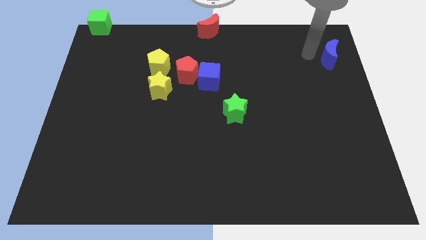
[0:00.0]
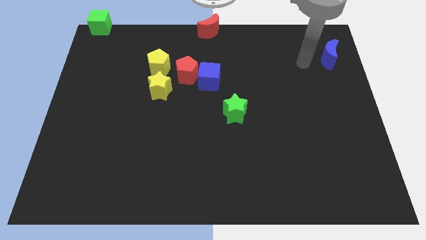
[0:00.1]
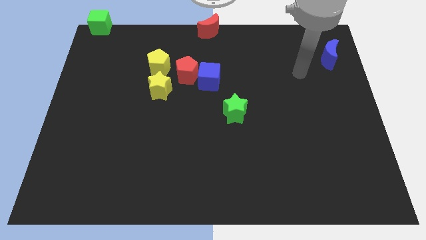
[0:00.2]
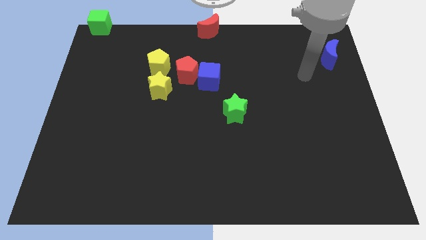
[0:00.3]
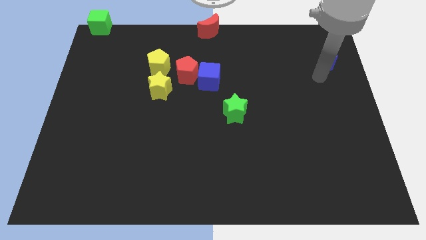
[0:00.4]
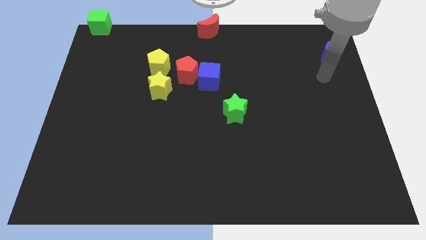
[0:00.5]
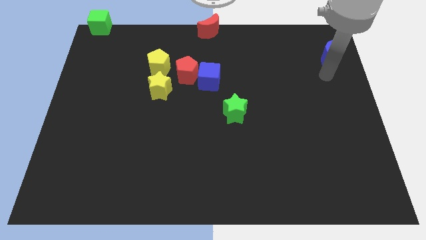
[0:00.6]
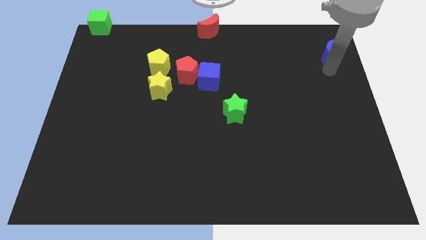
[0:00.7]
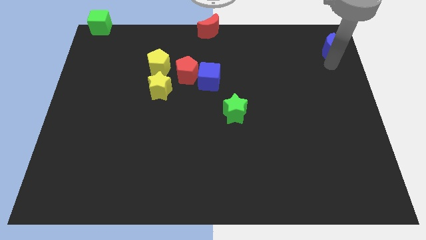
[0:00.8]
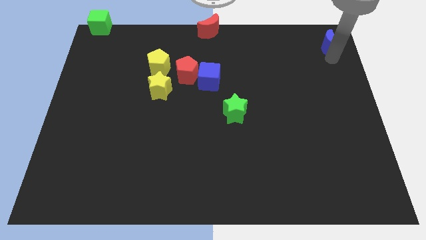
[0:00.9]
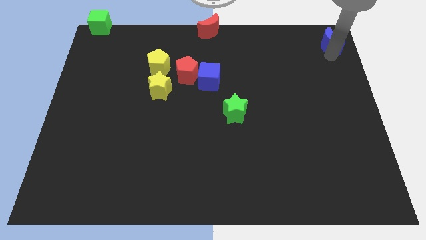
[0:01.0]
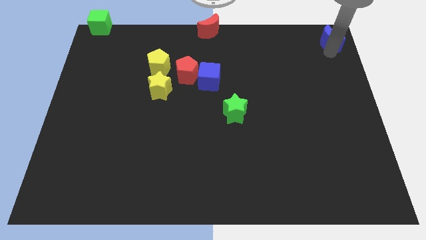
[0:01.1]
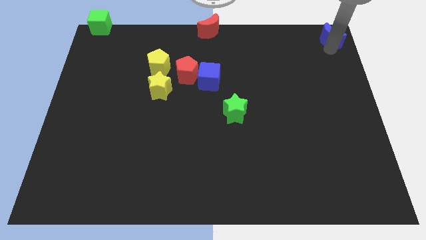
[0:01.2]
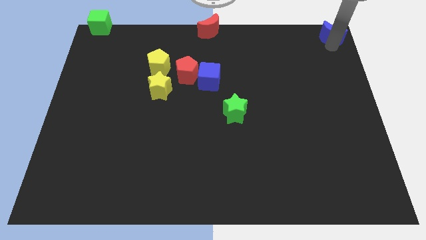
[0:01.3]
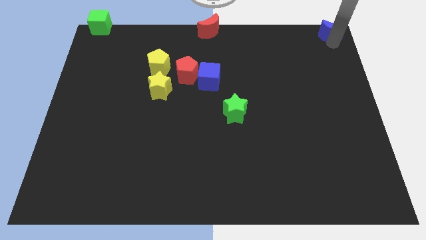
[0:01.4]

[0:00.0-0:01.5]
place the blue moon at the top right corner of the board

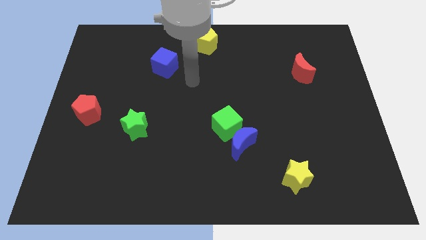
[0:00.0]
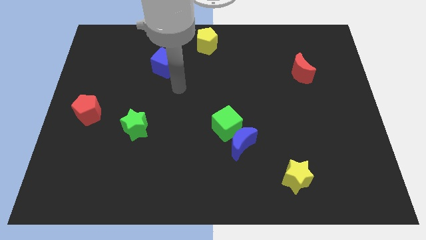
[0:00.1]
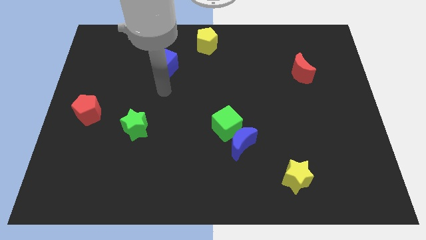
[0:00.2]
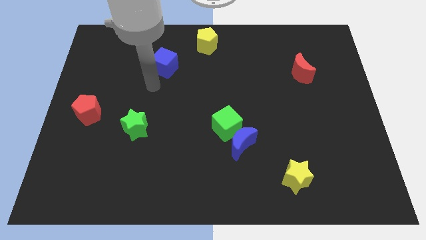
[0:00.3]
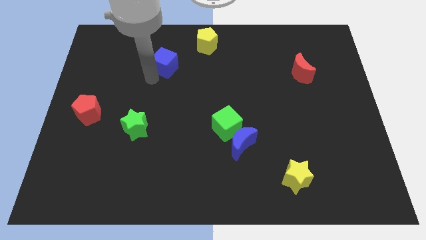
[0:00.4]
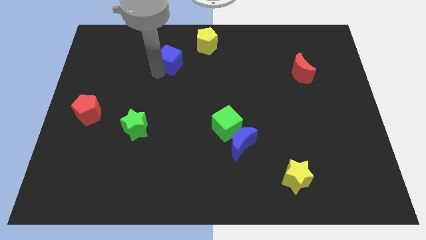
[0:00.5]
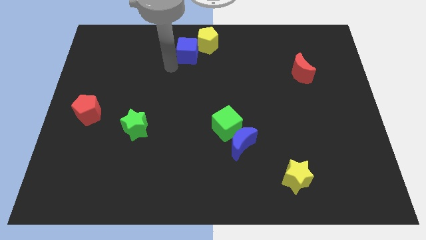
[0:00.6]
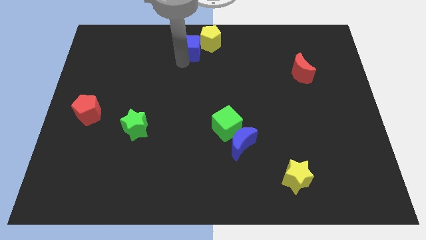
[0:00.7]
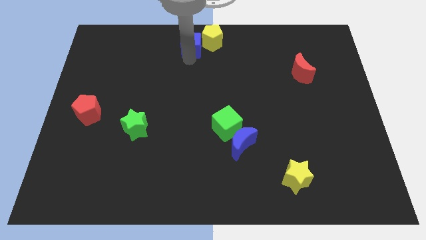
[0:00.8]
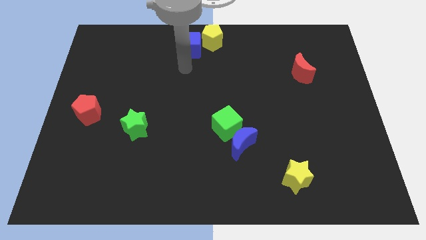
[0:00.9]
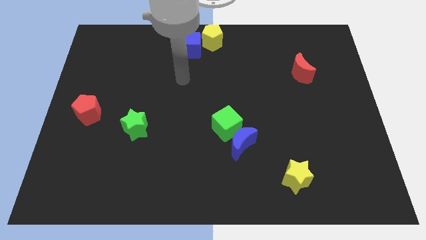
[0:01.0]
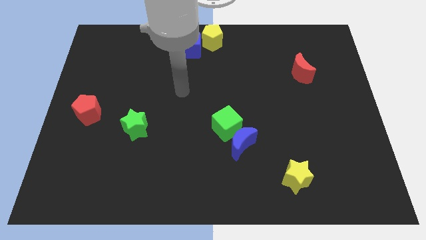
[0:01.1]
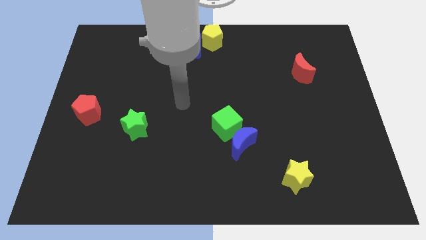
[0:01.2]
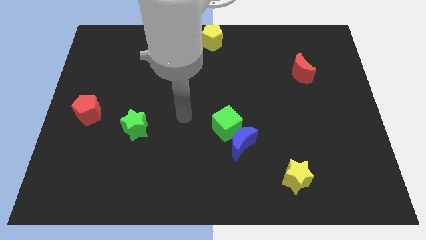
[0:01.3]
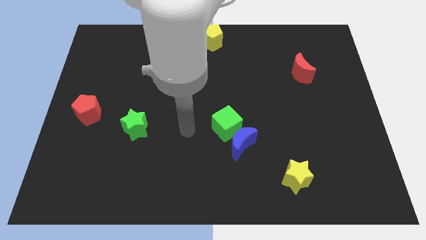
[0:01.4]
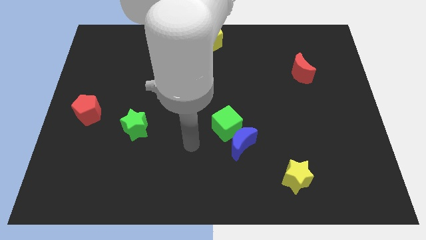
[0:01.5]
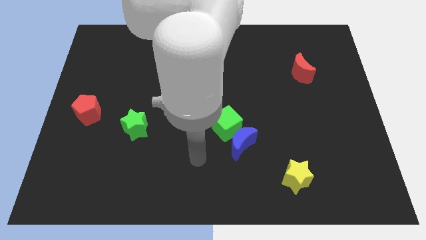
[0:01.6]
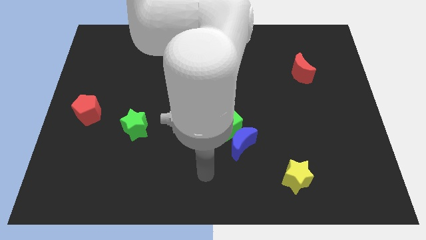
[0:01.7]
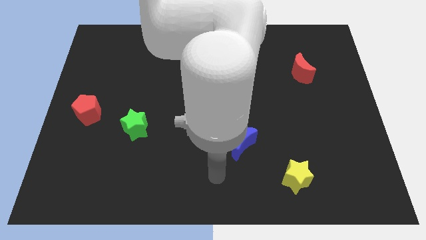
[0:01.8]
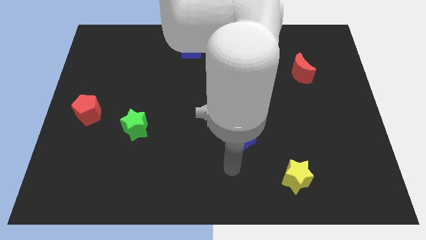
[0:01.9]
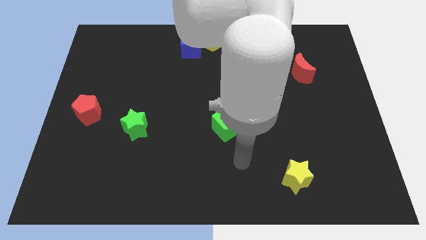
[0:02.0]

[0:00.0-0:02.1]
push the blue cube close to the yellow pentagon

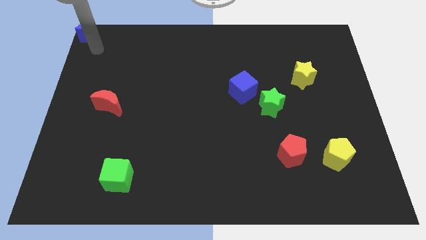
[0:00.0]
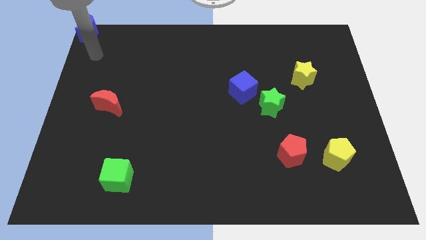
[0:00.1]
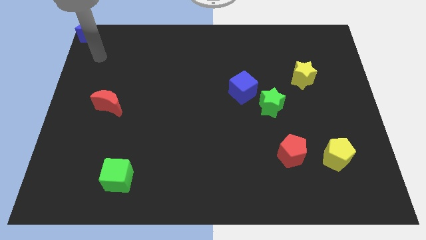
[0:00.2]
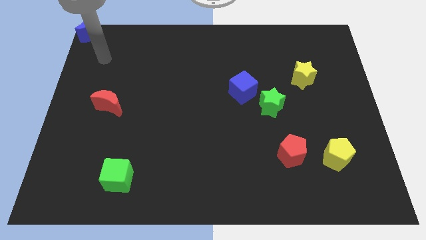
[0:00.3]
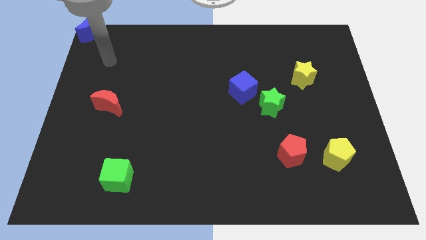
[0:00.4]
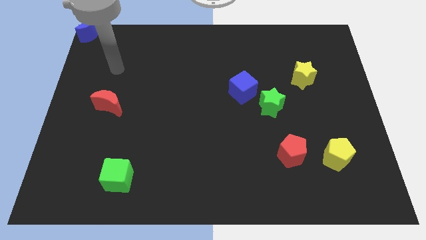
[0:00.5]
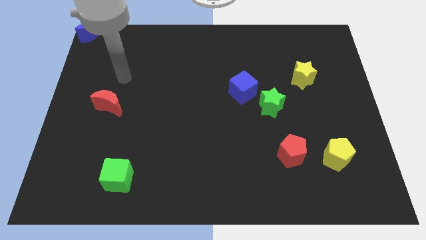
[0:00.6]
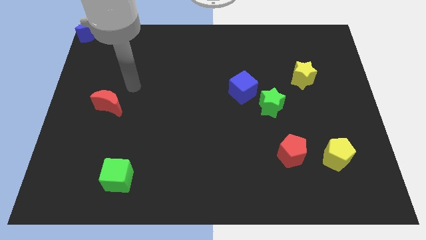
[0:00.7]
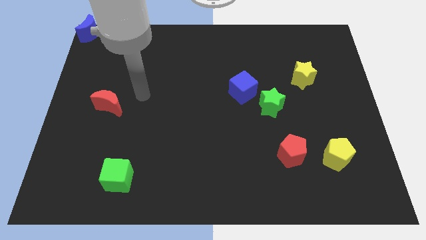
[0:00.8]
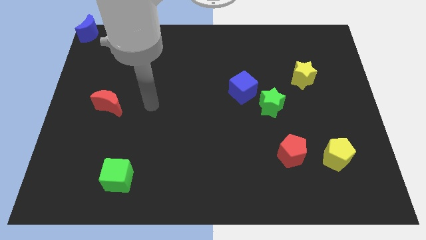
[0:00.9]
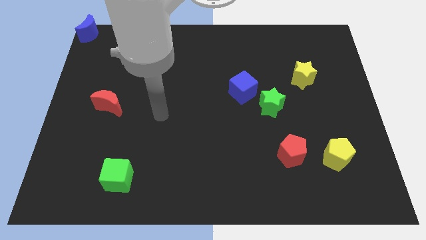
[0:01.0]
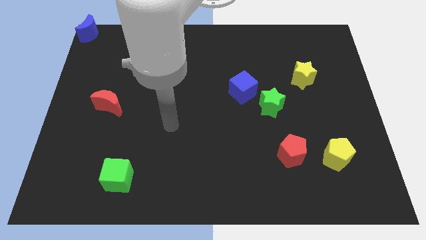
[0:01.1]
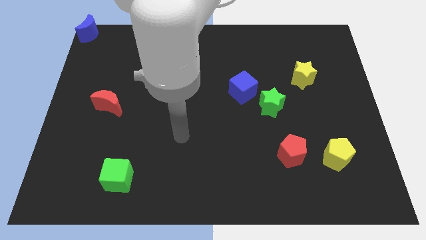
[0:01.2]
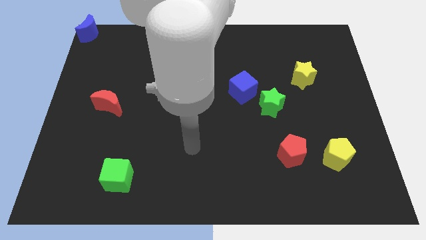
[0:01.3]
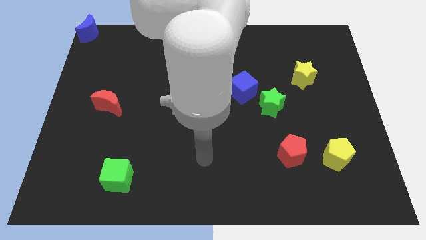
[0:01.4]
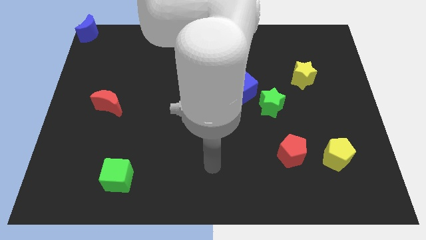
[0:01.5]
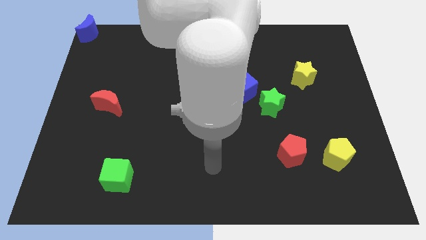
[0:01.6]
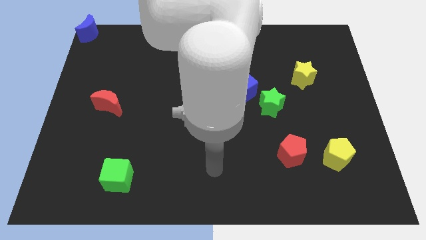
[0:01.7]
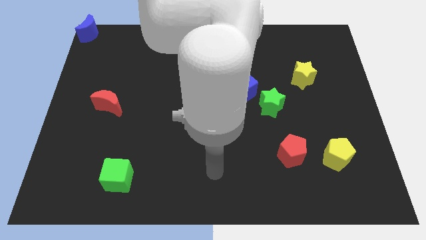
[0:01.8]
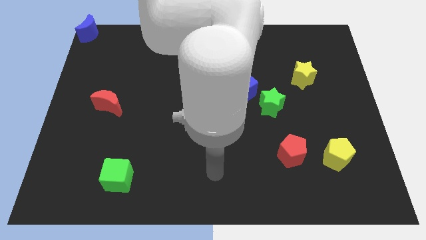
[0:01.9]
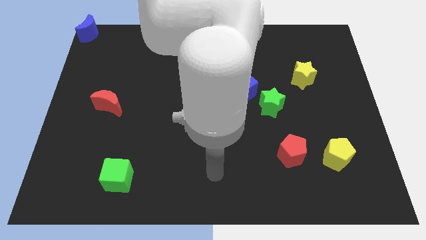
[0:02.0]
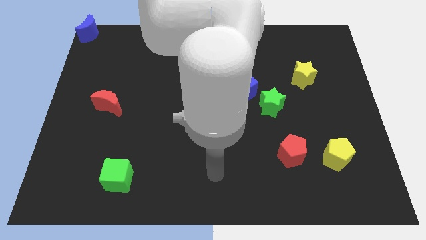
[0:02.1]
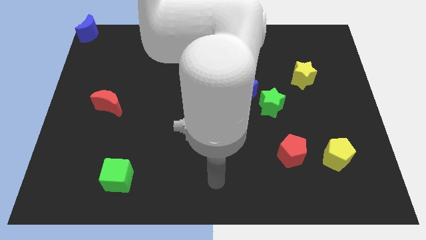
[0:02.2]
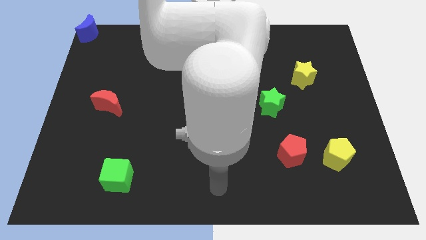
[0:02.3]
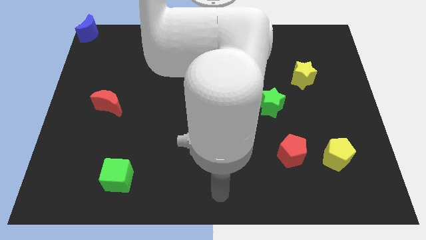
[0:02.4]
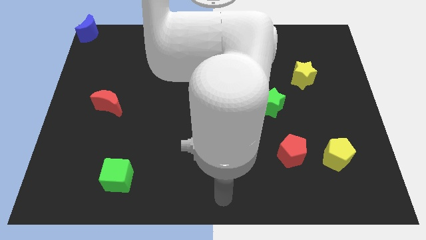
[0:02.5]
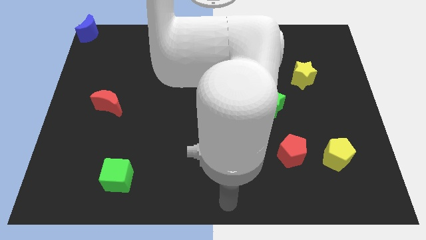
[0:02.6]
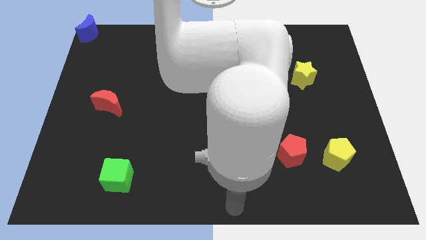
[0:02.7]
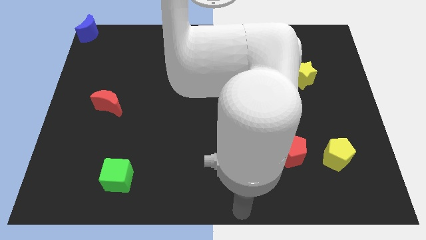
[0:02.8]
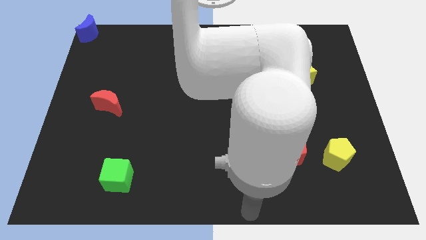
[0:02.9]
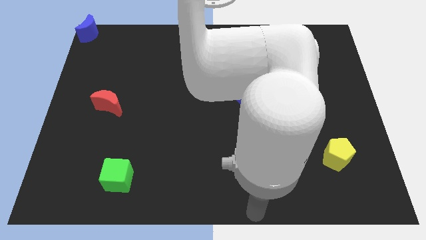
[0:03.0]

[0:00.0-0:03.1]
move your arm away from blue moon

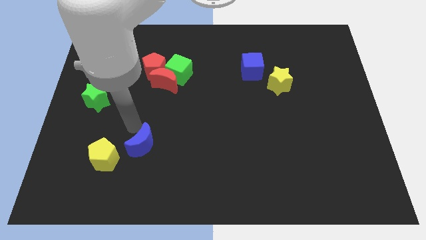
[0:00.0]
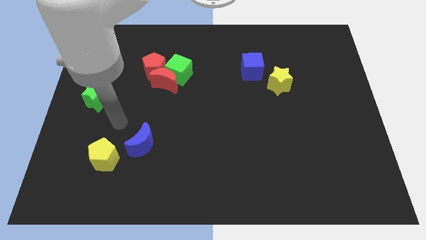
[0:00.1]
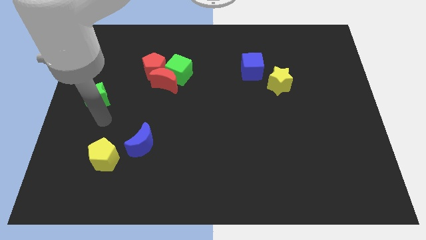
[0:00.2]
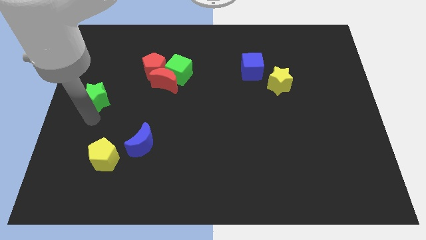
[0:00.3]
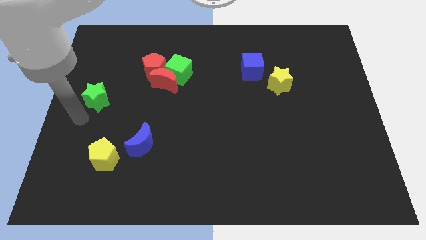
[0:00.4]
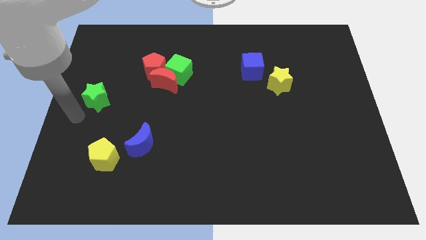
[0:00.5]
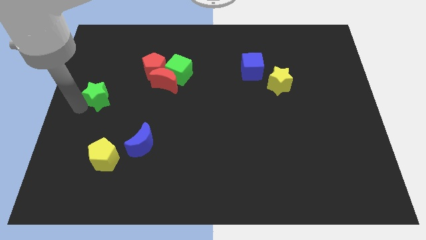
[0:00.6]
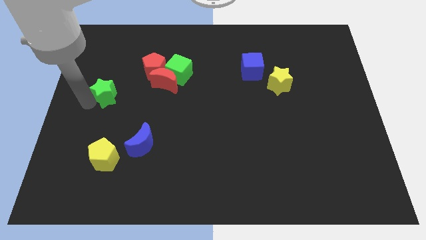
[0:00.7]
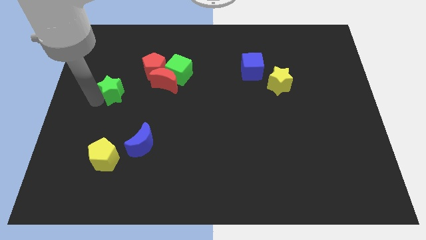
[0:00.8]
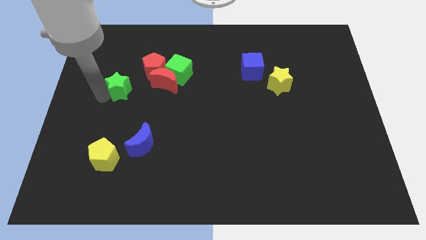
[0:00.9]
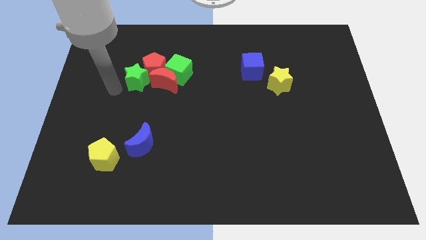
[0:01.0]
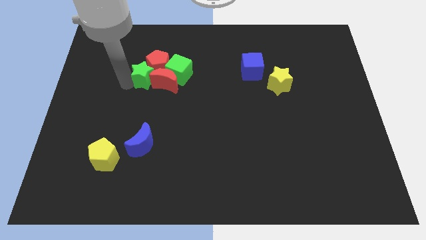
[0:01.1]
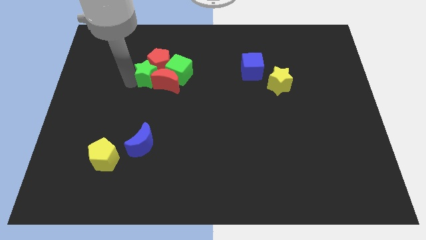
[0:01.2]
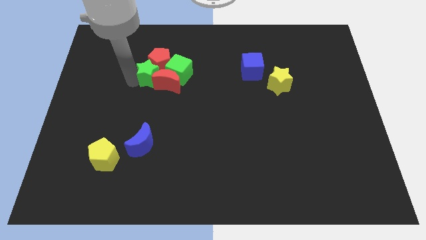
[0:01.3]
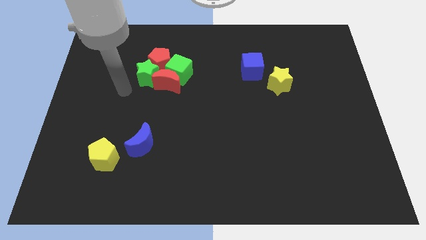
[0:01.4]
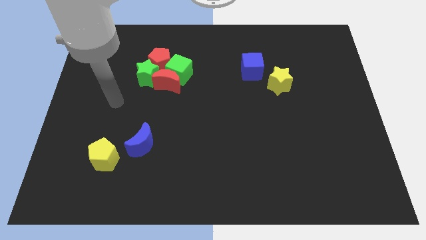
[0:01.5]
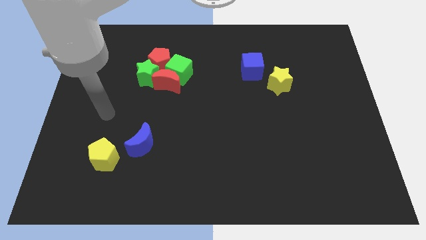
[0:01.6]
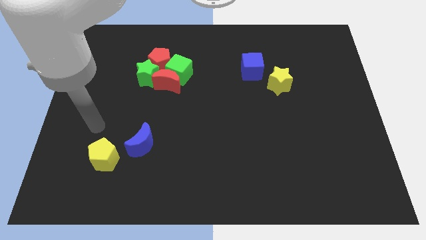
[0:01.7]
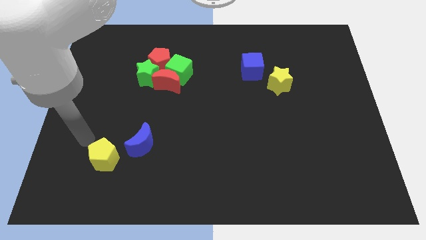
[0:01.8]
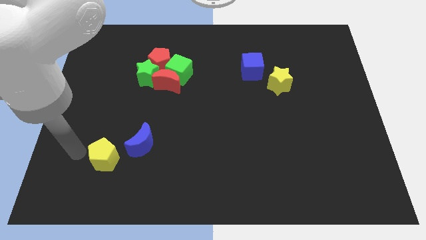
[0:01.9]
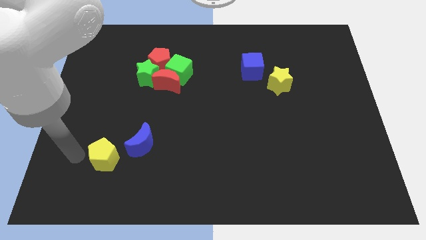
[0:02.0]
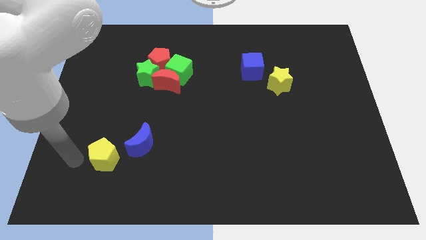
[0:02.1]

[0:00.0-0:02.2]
push the green star into group of blocks
